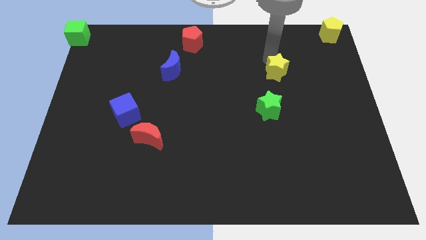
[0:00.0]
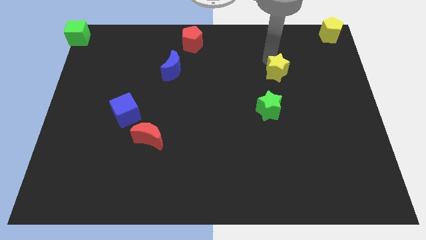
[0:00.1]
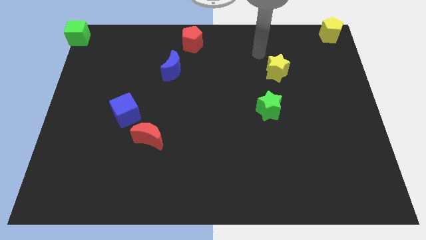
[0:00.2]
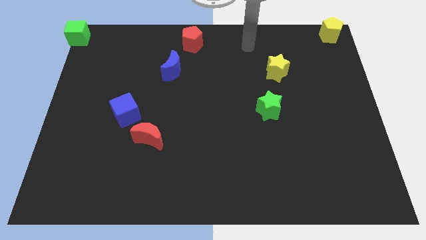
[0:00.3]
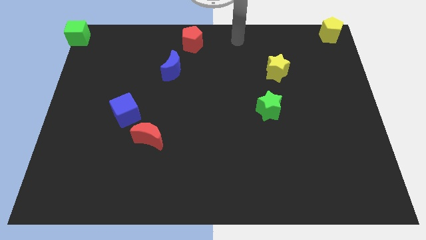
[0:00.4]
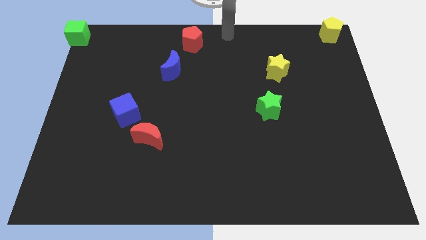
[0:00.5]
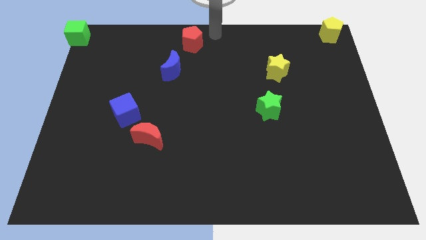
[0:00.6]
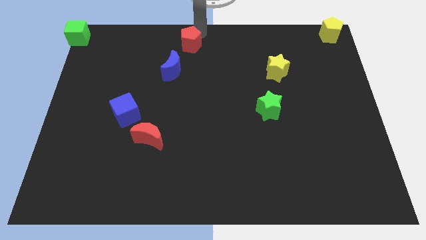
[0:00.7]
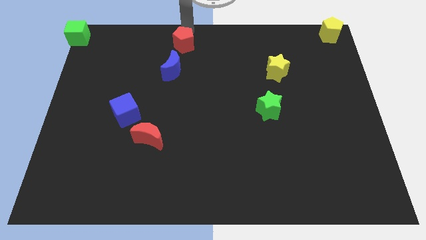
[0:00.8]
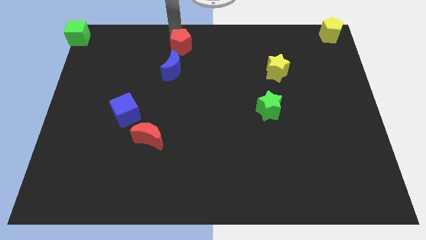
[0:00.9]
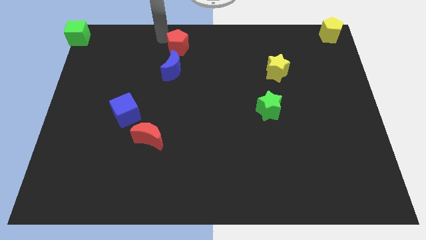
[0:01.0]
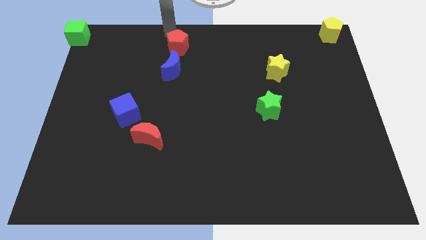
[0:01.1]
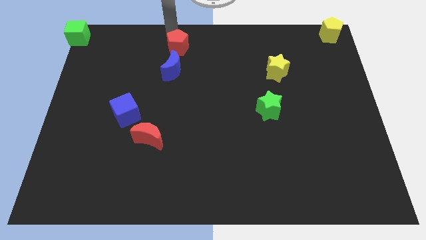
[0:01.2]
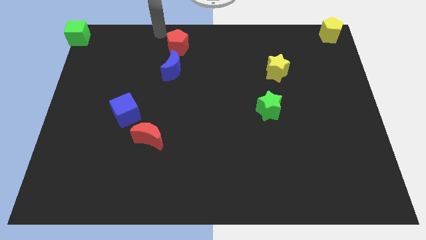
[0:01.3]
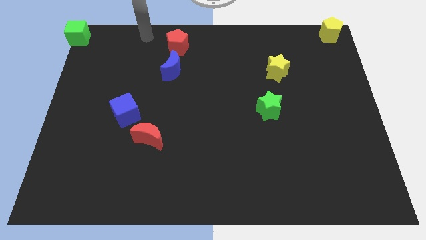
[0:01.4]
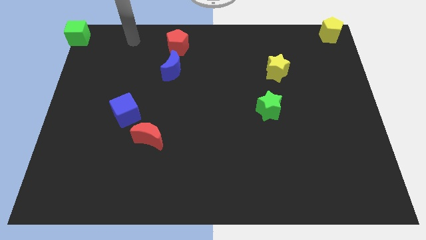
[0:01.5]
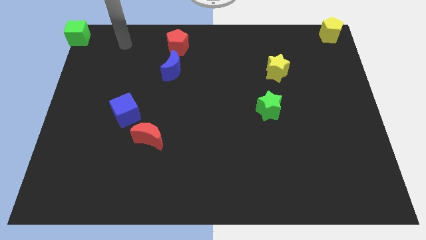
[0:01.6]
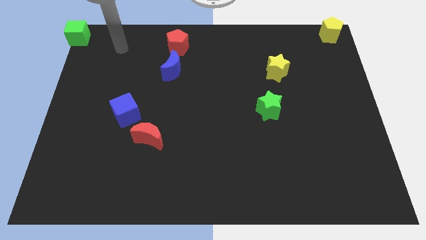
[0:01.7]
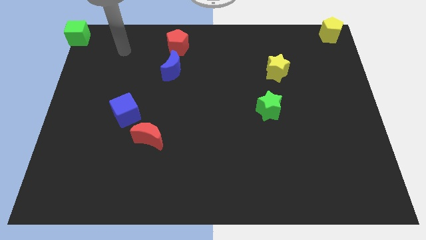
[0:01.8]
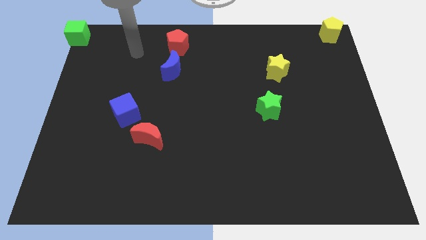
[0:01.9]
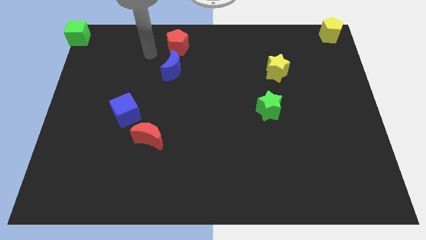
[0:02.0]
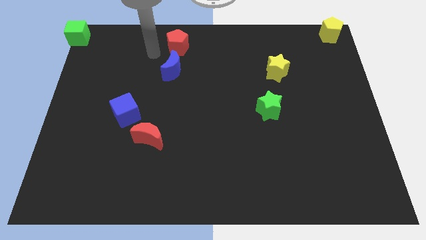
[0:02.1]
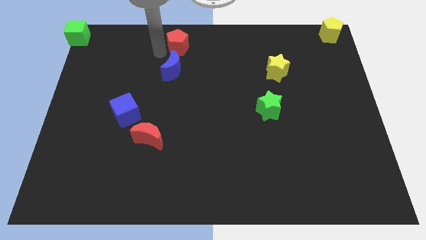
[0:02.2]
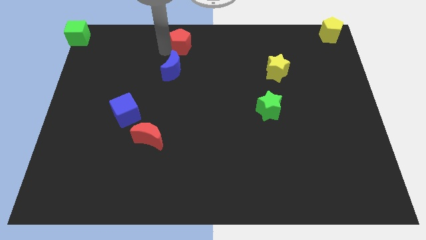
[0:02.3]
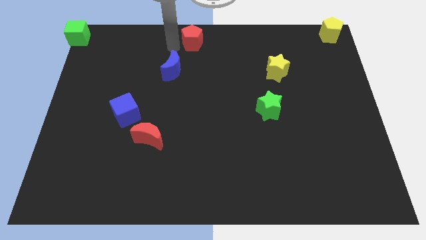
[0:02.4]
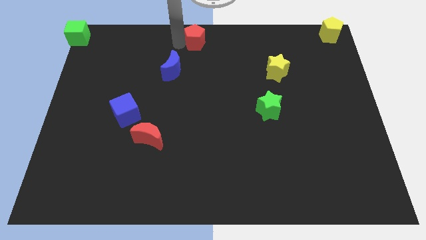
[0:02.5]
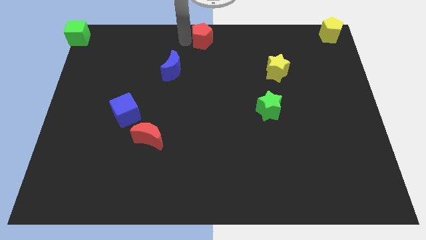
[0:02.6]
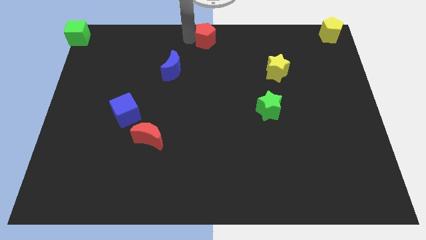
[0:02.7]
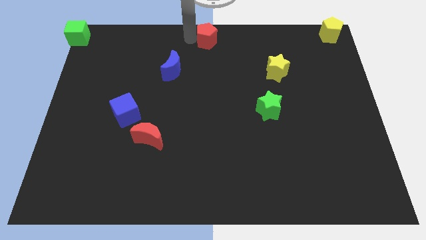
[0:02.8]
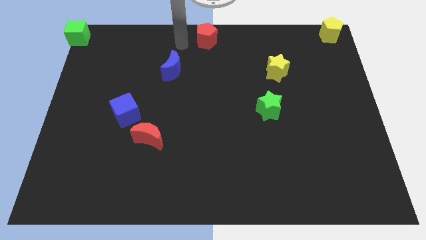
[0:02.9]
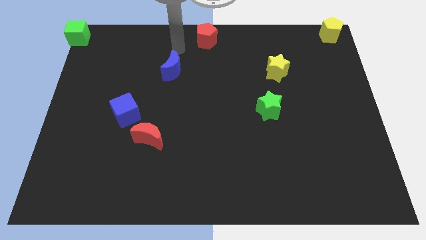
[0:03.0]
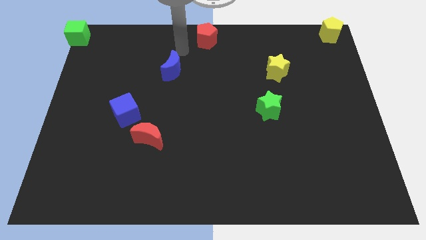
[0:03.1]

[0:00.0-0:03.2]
place red pentagon towards top middle end of the board

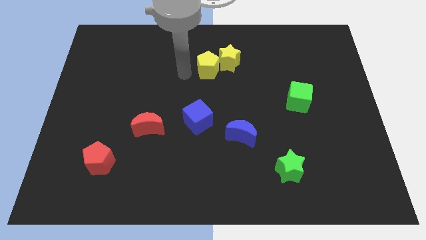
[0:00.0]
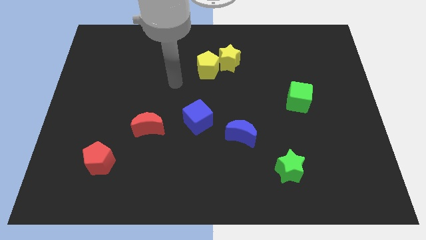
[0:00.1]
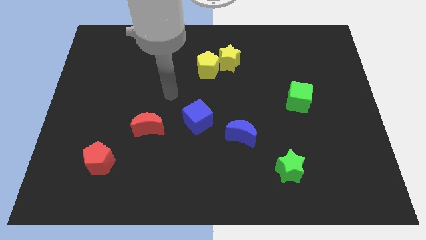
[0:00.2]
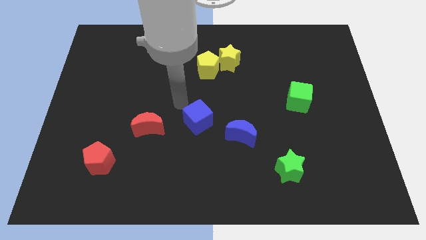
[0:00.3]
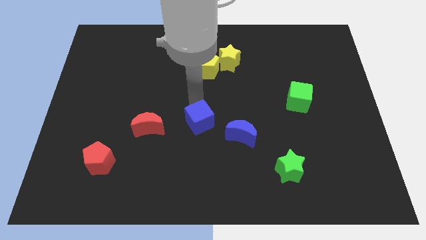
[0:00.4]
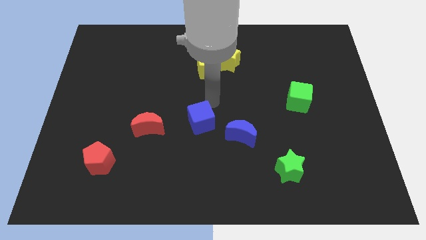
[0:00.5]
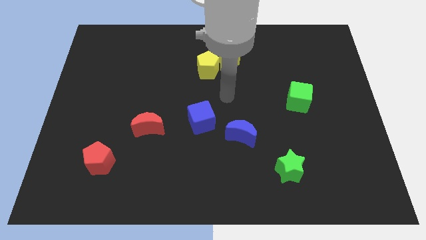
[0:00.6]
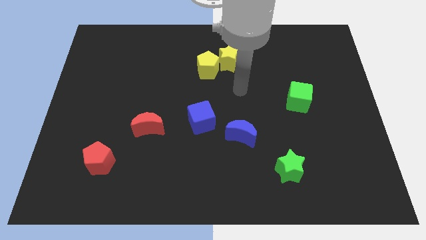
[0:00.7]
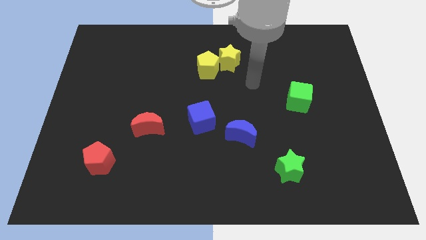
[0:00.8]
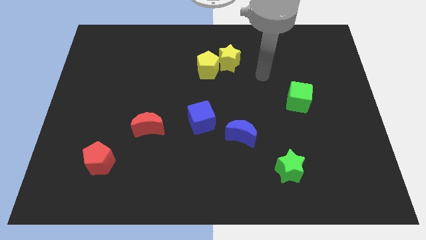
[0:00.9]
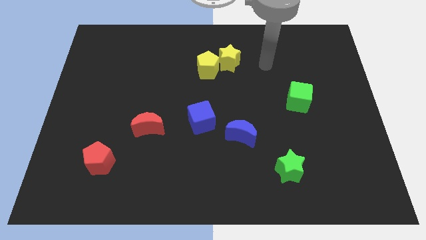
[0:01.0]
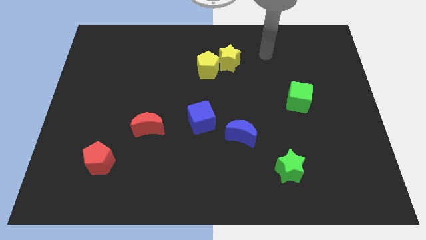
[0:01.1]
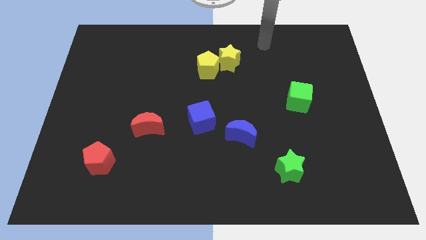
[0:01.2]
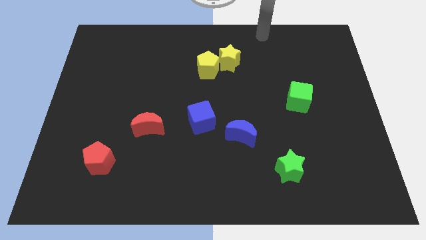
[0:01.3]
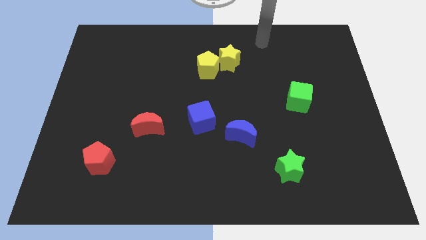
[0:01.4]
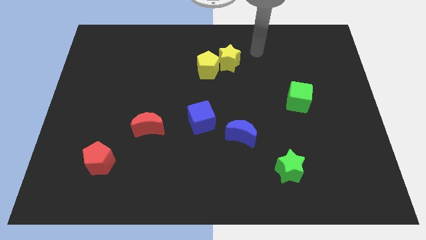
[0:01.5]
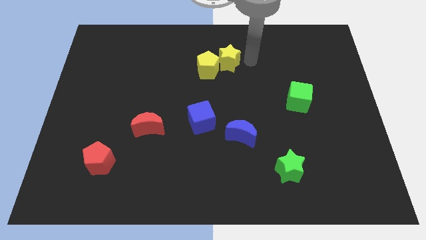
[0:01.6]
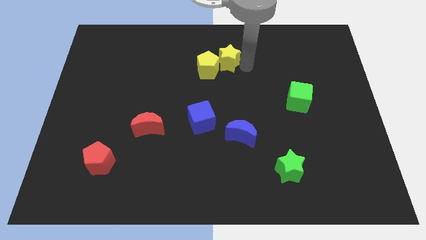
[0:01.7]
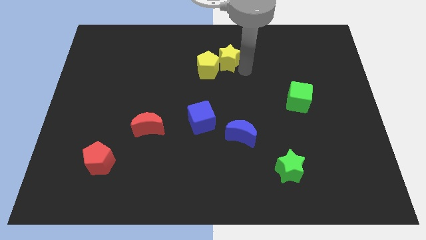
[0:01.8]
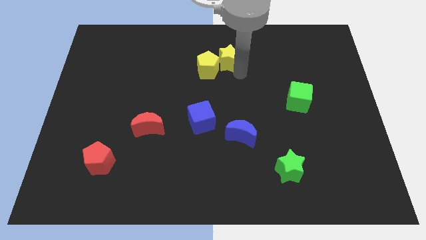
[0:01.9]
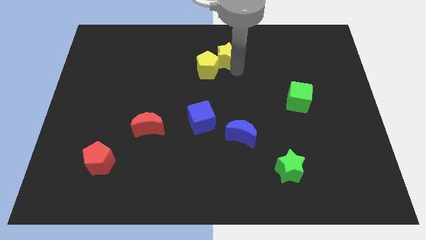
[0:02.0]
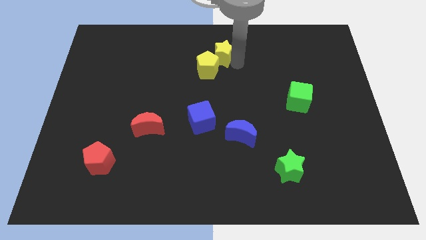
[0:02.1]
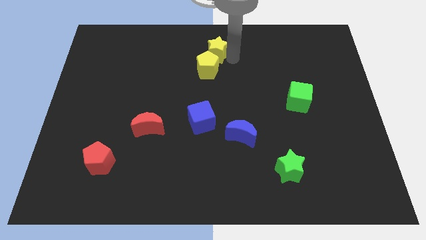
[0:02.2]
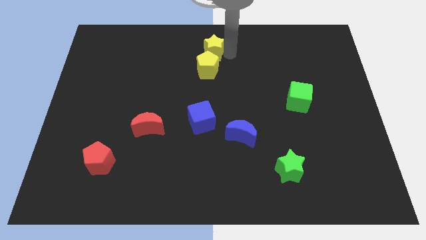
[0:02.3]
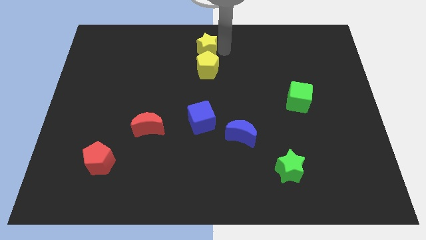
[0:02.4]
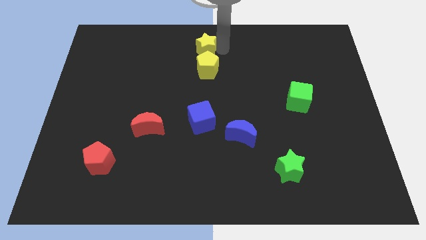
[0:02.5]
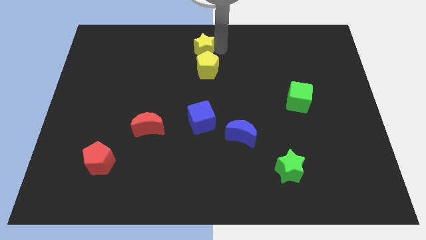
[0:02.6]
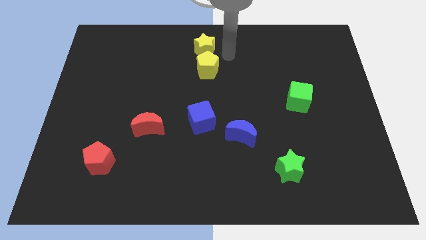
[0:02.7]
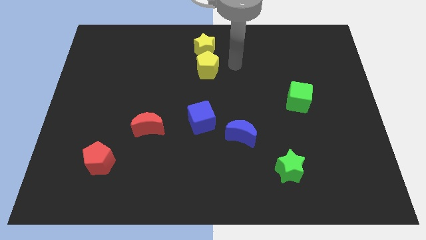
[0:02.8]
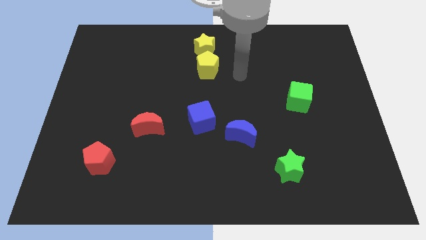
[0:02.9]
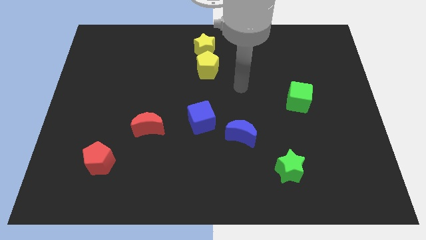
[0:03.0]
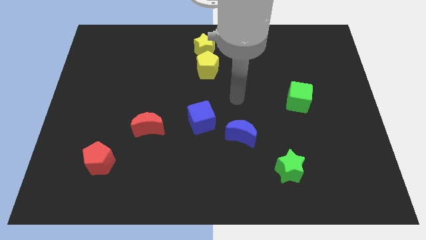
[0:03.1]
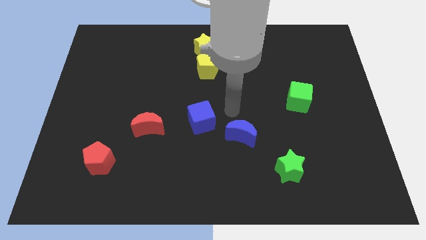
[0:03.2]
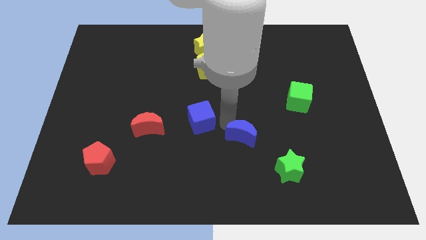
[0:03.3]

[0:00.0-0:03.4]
move the yellow star above the yellow pentagon

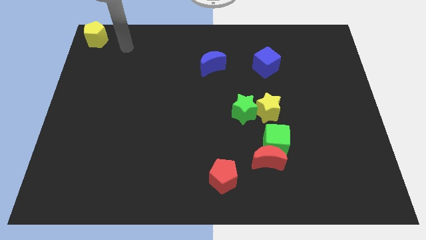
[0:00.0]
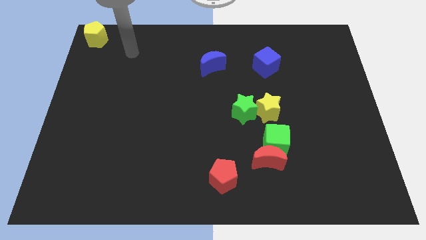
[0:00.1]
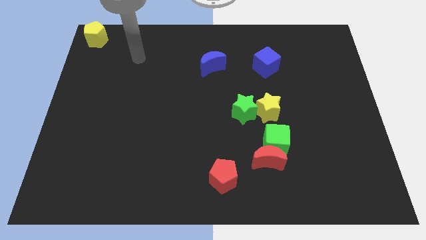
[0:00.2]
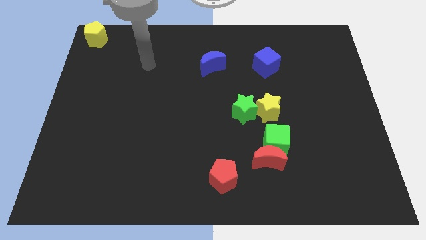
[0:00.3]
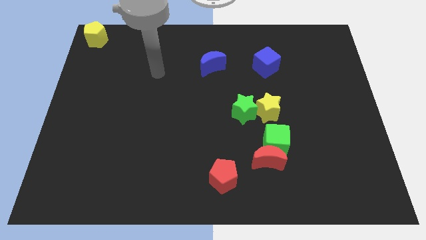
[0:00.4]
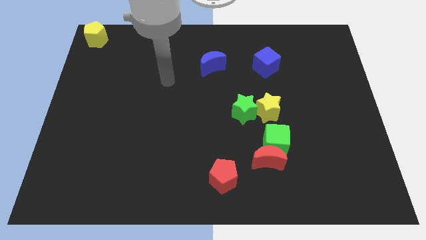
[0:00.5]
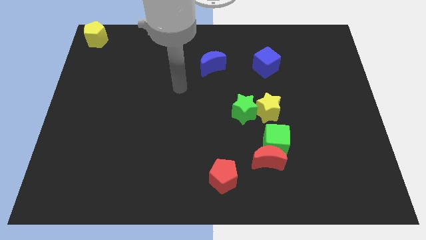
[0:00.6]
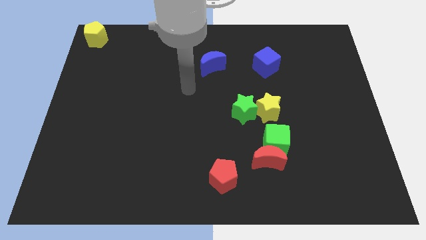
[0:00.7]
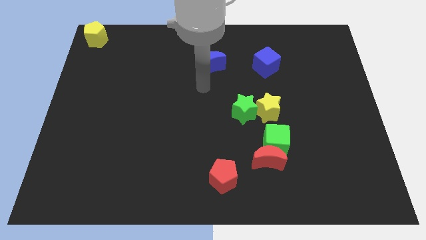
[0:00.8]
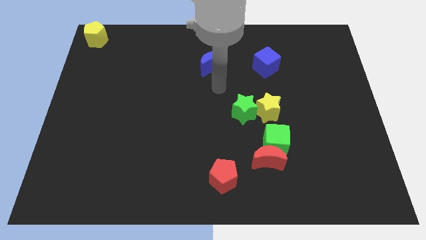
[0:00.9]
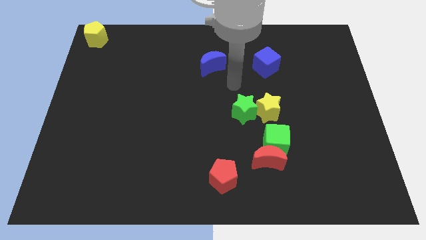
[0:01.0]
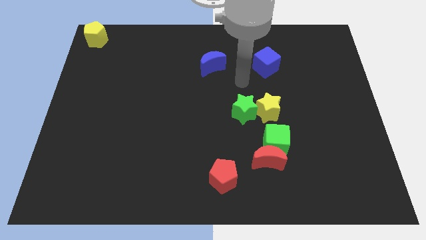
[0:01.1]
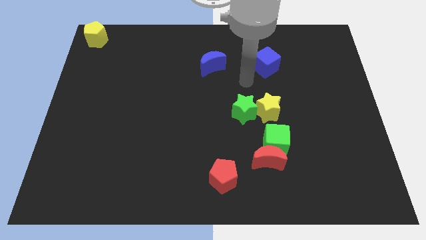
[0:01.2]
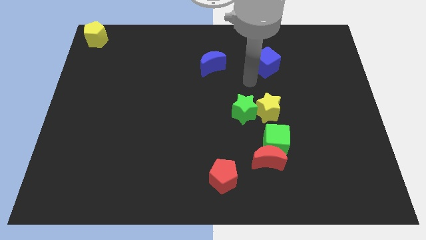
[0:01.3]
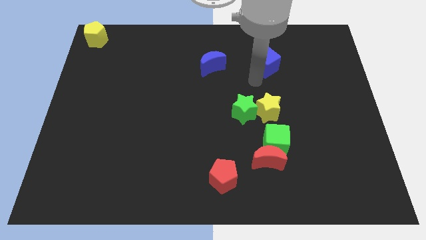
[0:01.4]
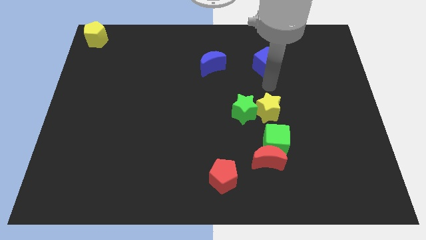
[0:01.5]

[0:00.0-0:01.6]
point the arm below the bottom of the blue cube

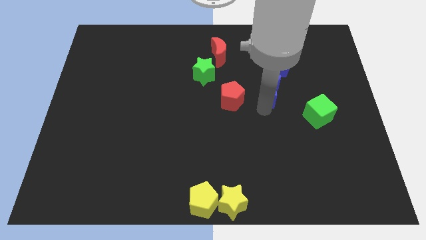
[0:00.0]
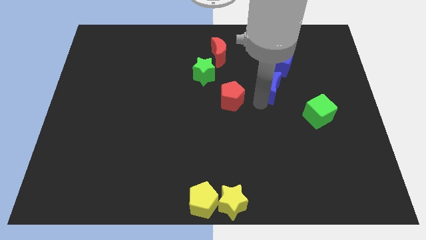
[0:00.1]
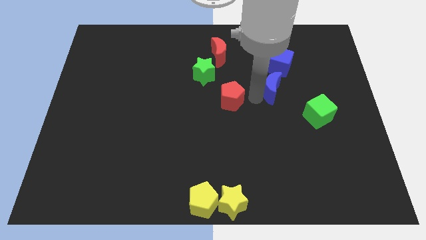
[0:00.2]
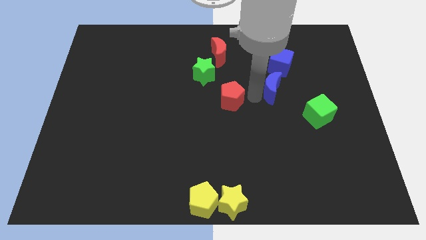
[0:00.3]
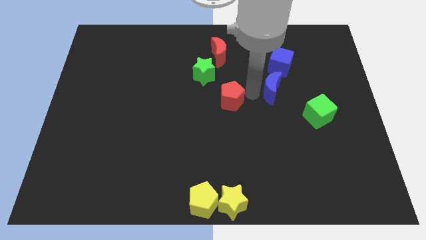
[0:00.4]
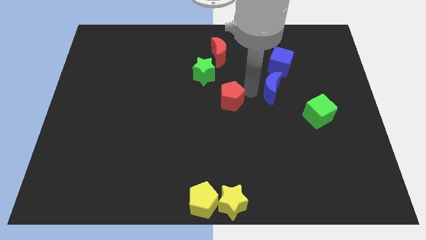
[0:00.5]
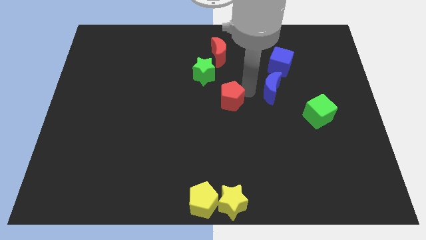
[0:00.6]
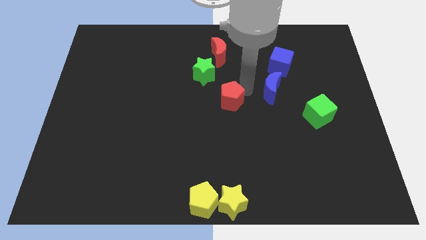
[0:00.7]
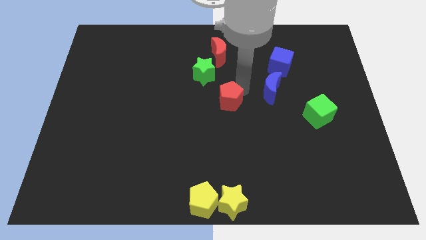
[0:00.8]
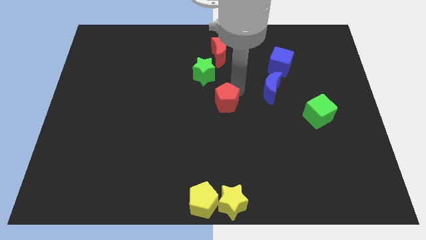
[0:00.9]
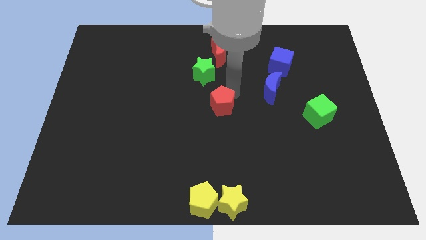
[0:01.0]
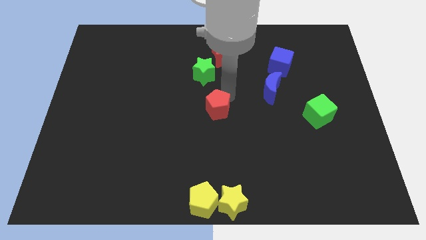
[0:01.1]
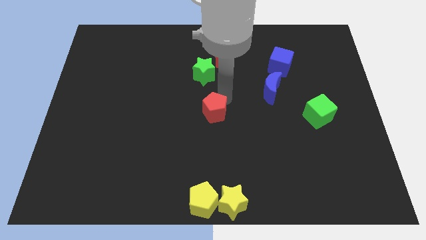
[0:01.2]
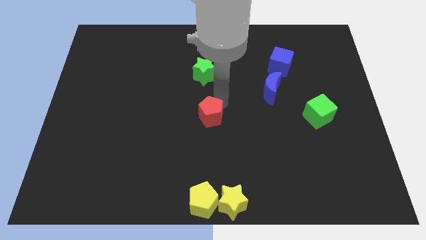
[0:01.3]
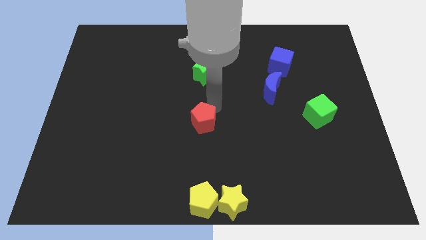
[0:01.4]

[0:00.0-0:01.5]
place the red pentagon in between yellow pentagon and green star
